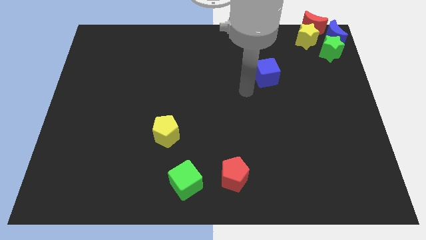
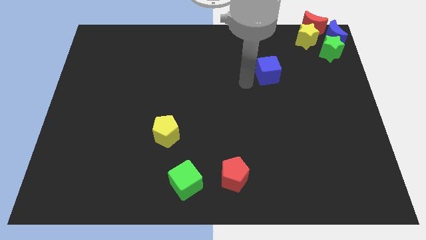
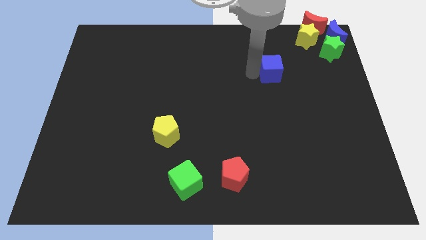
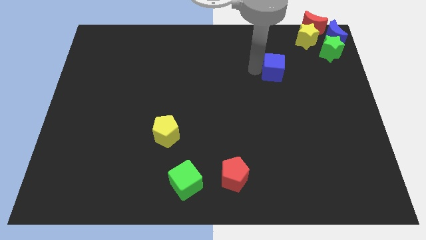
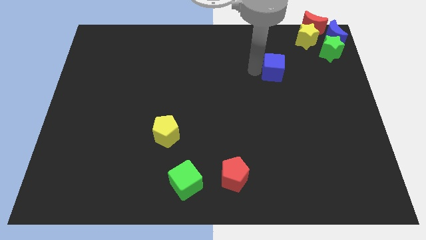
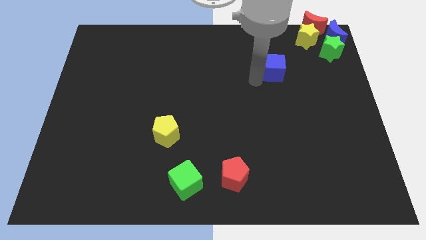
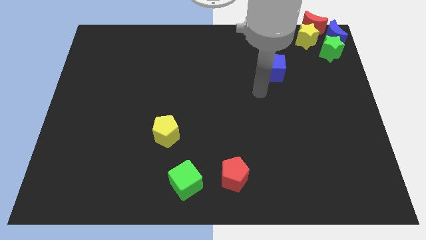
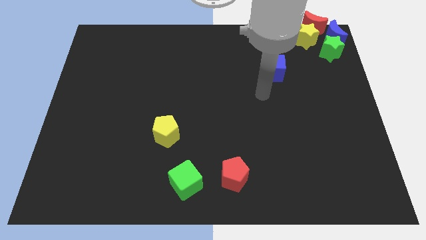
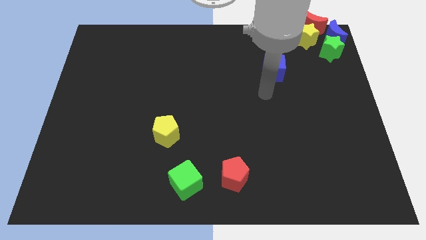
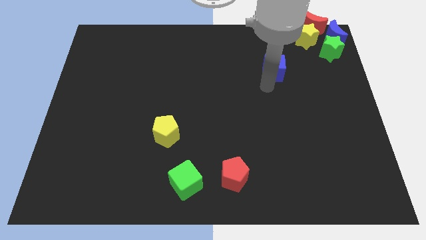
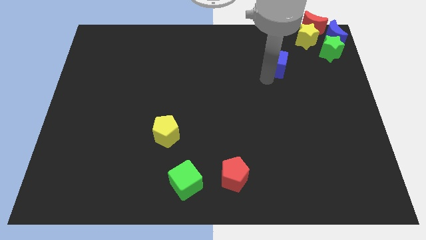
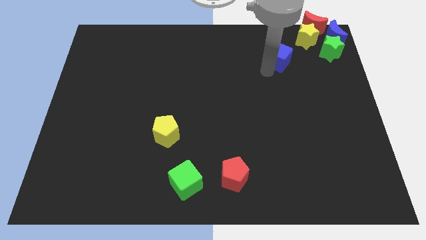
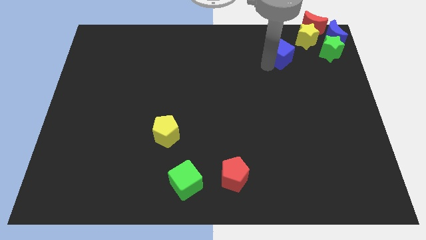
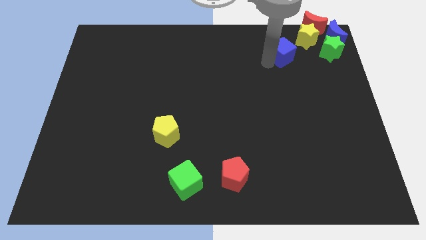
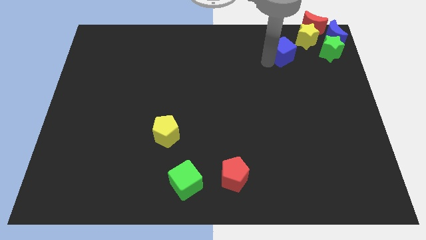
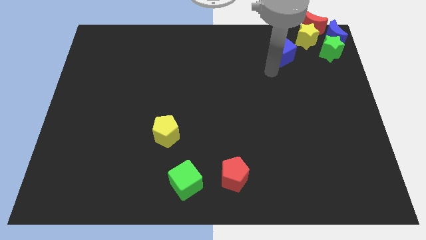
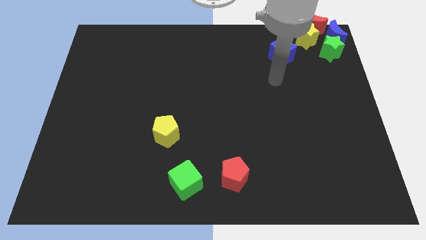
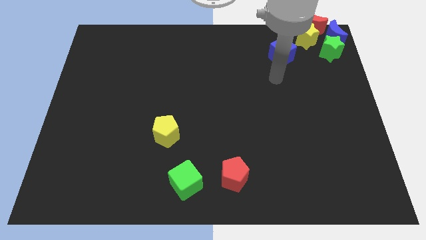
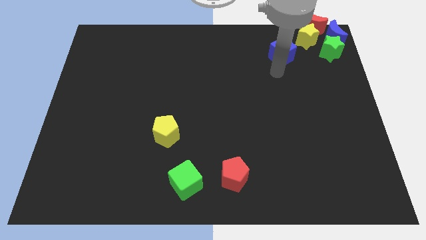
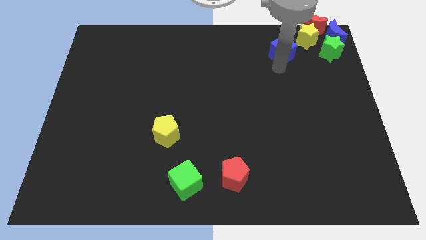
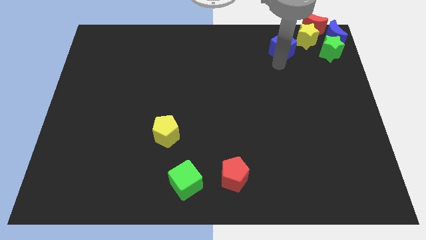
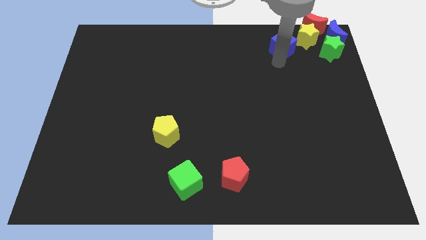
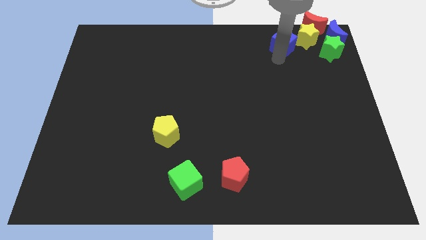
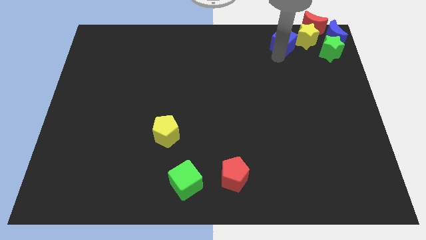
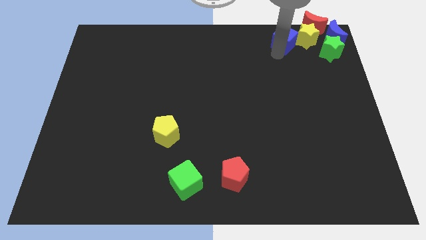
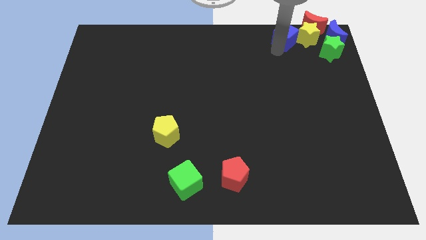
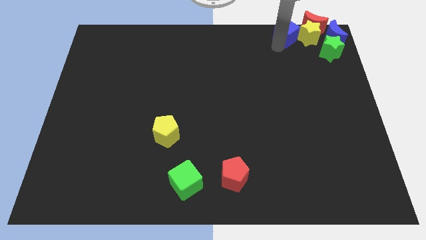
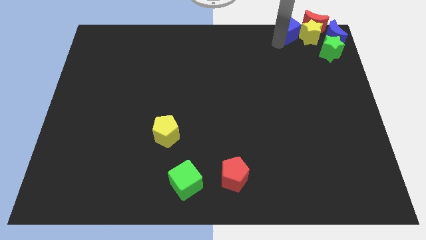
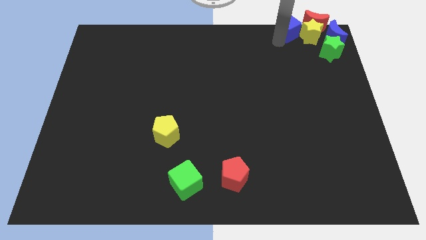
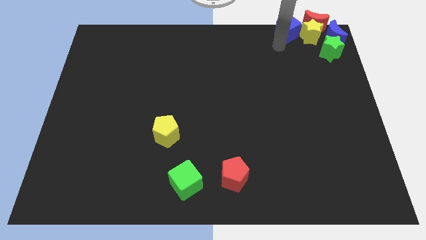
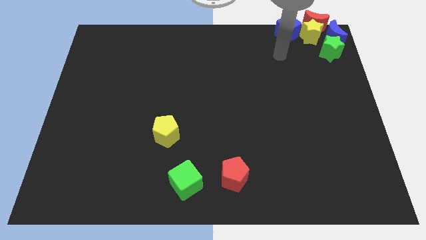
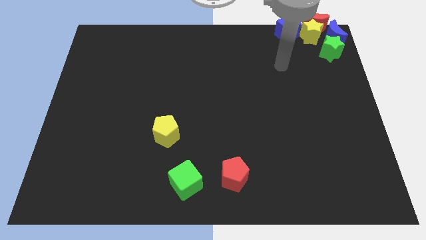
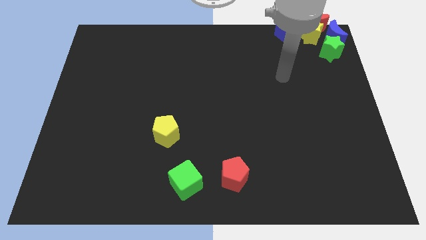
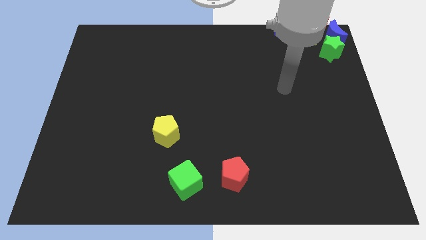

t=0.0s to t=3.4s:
move blue cube towards the yellow star

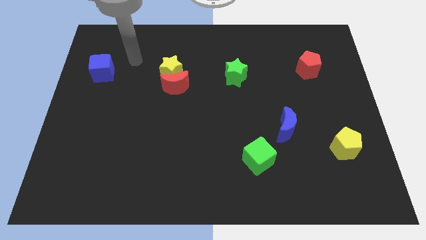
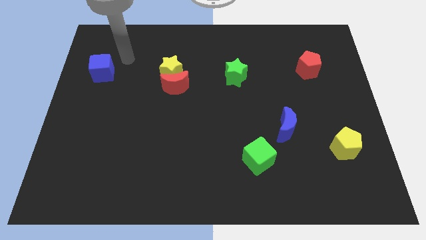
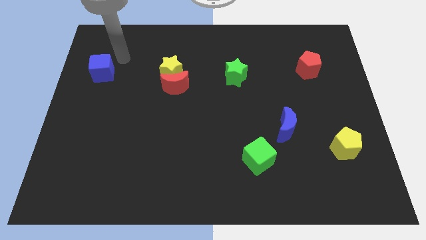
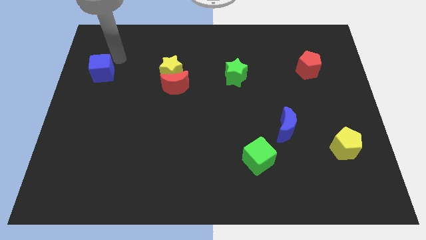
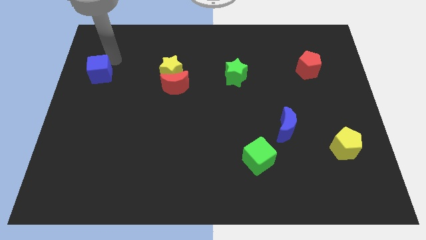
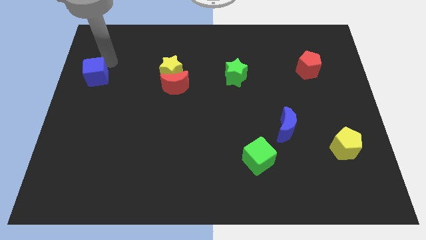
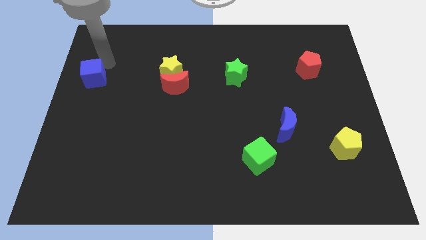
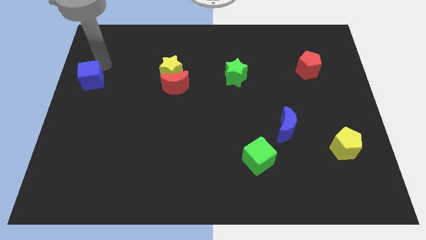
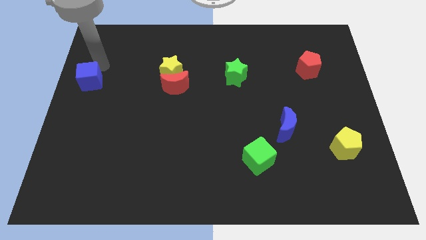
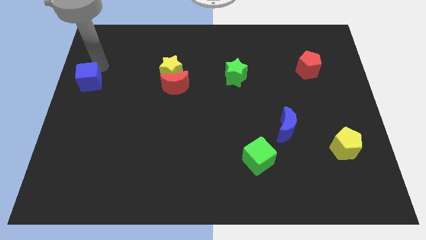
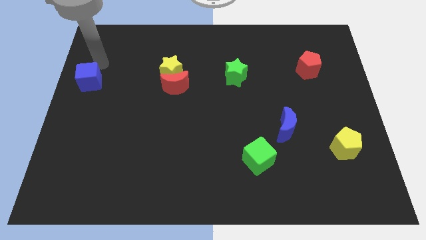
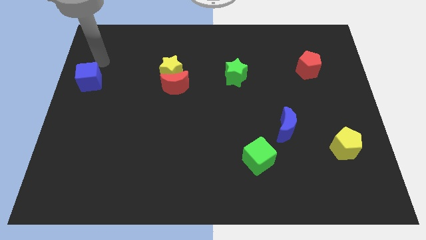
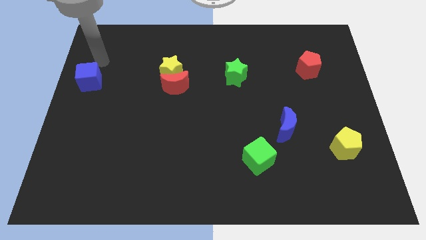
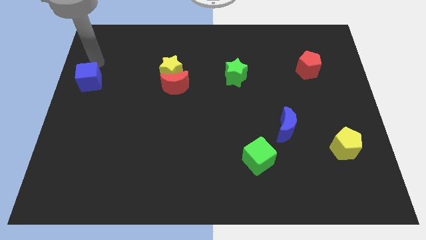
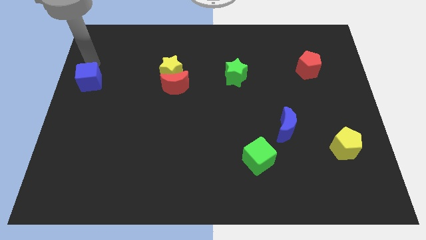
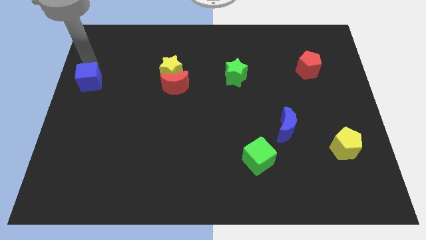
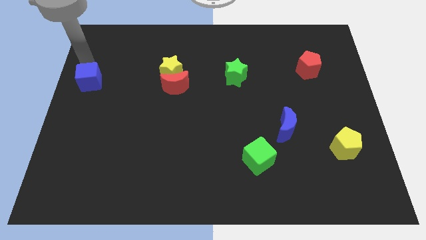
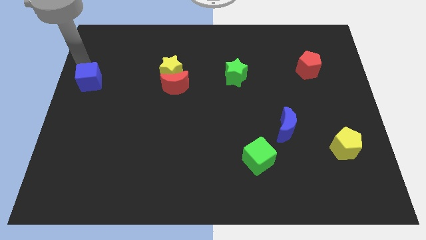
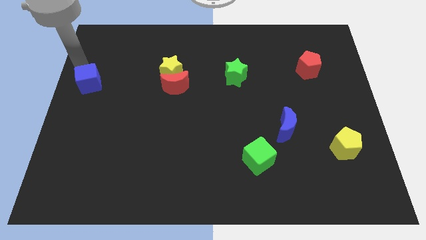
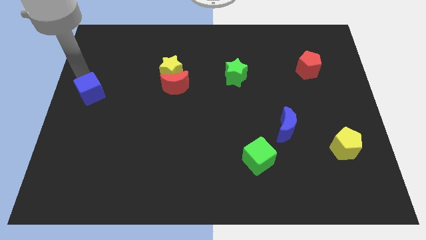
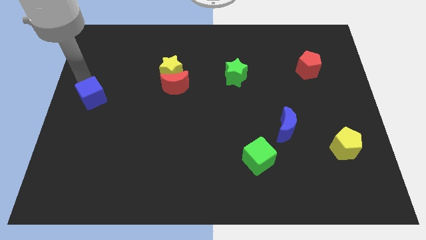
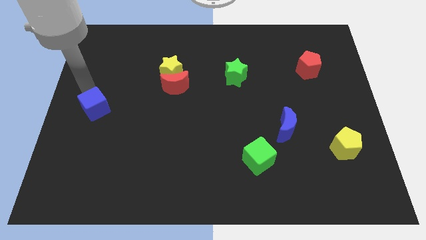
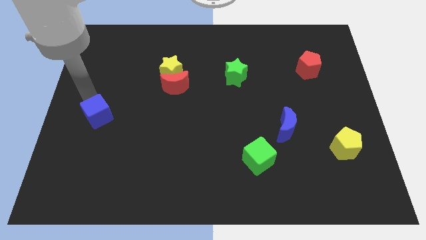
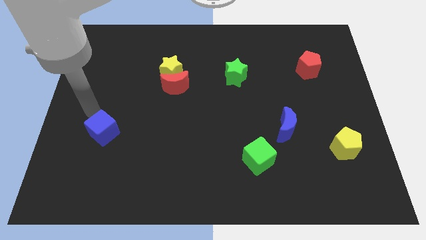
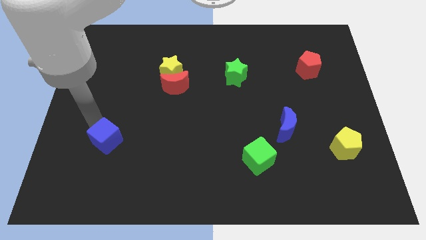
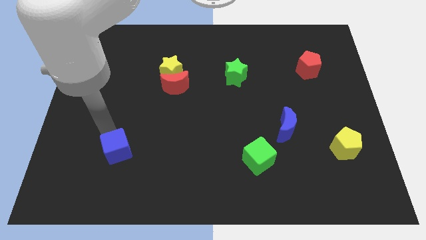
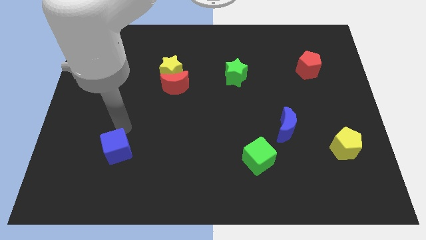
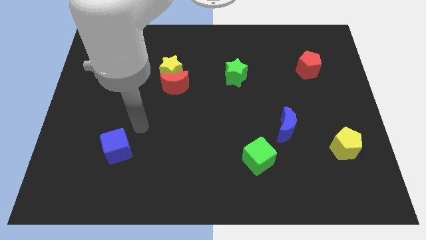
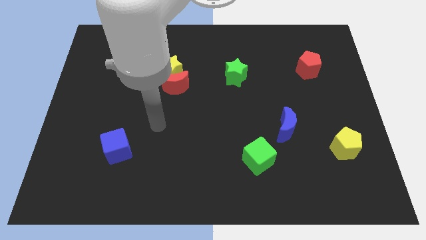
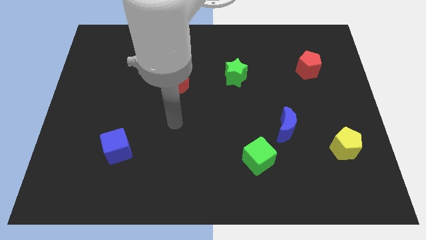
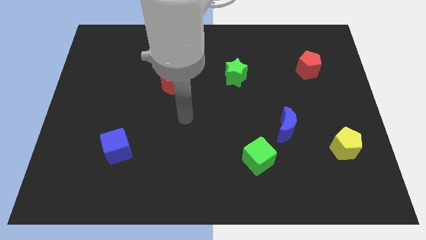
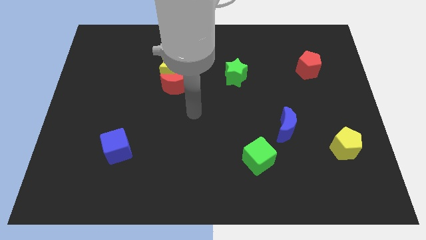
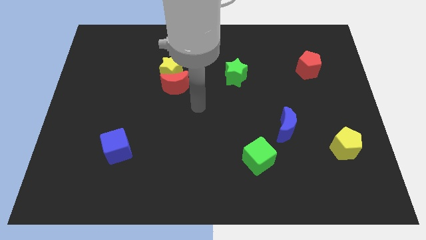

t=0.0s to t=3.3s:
push the blue cube towards the bottom side of the board

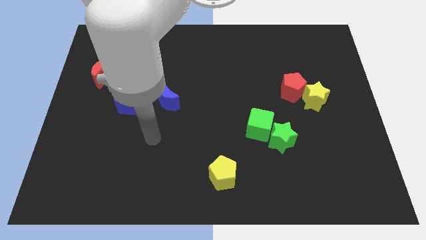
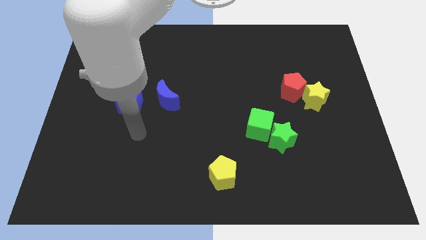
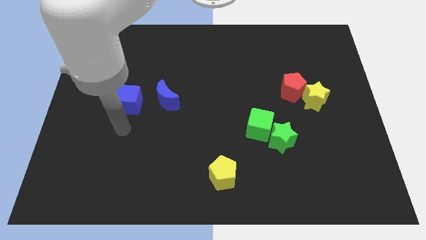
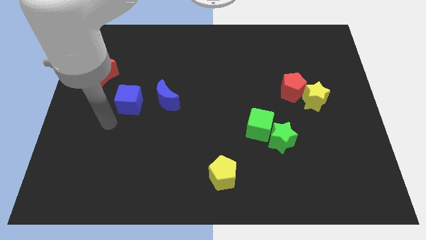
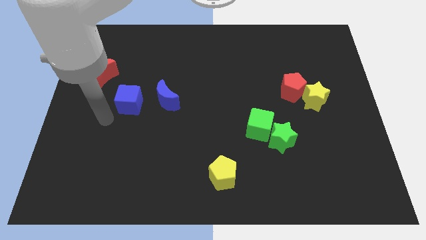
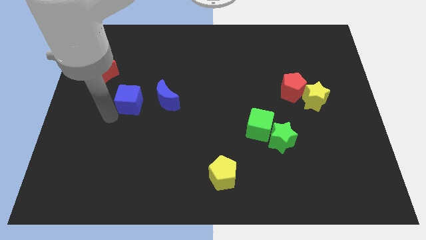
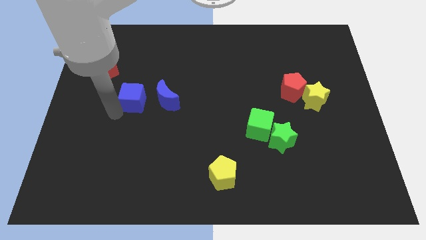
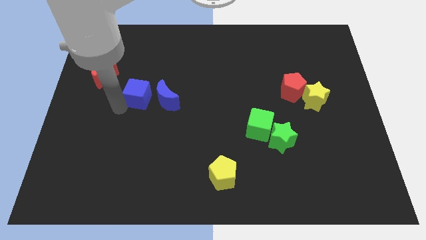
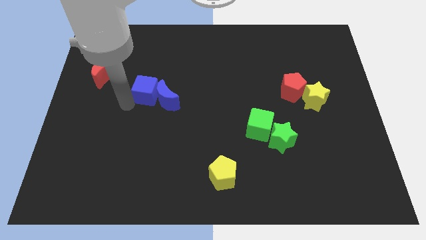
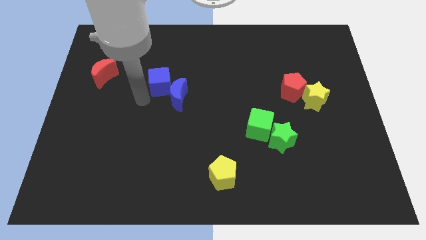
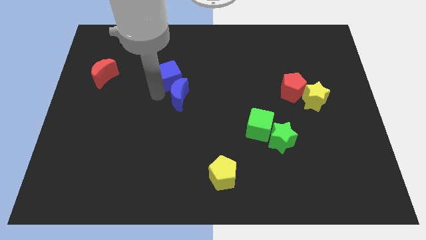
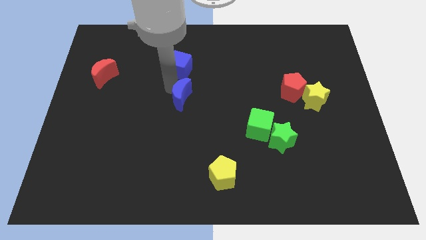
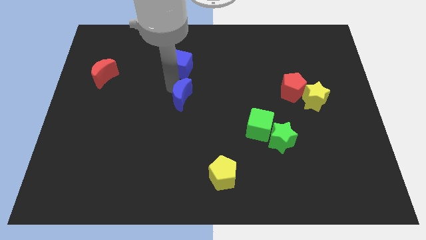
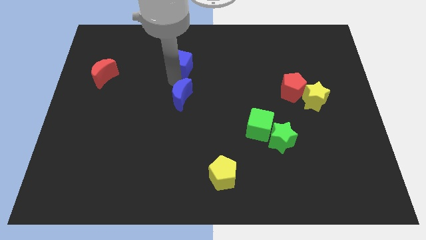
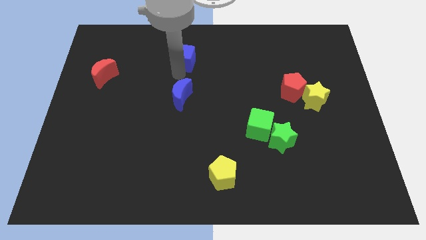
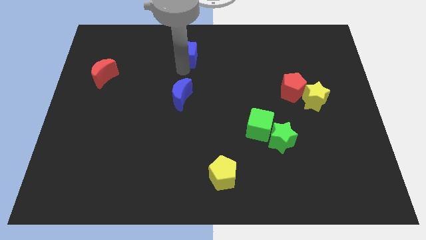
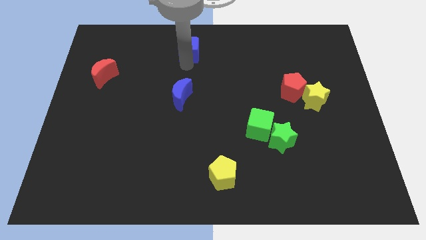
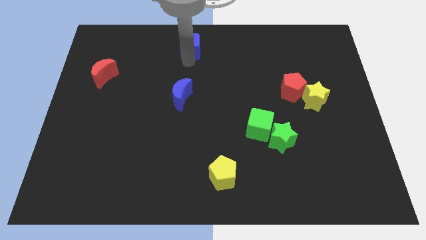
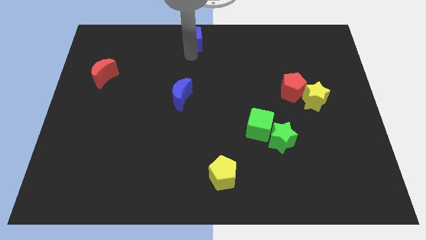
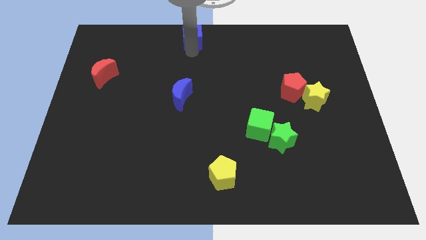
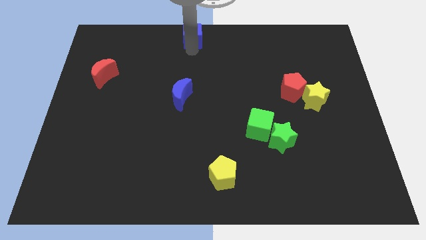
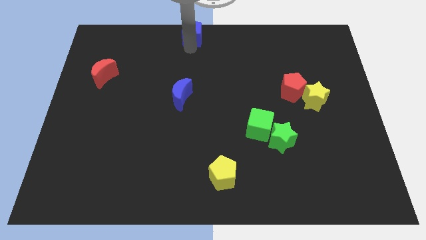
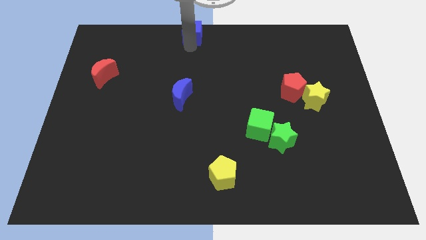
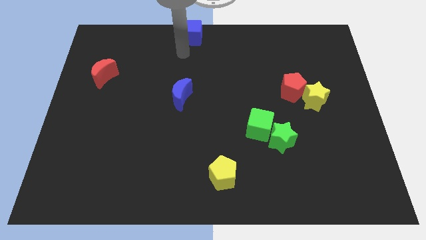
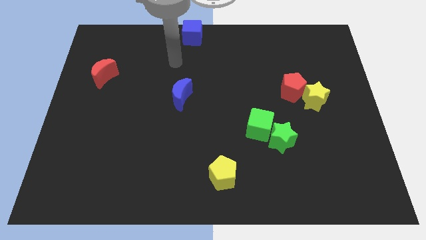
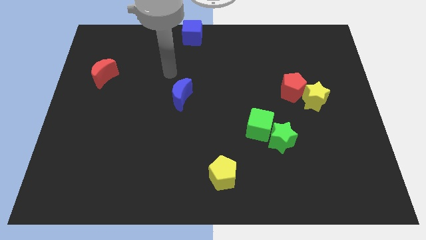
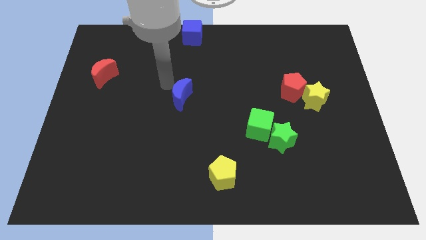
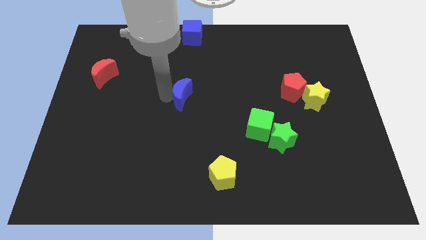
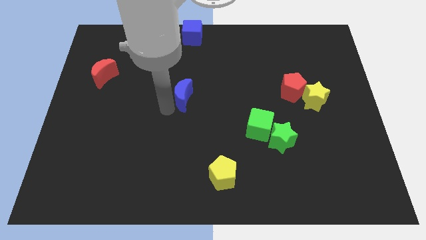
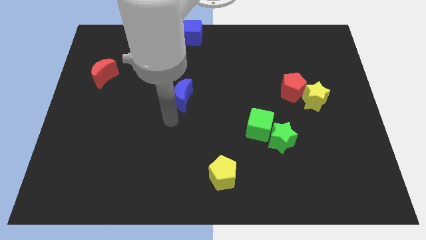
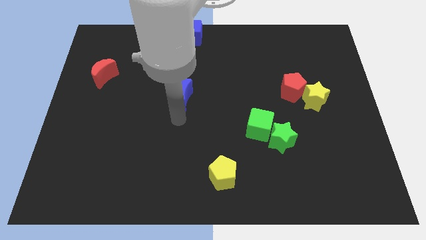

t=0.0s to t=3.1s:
put the blue cube at the top center of the board
